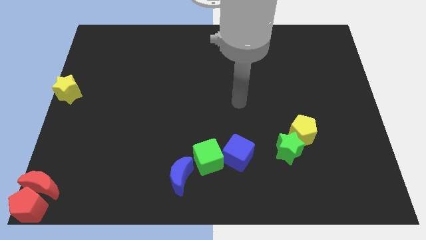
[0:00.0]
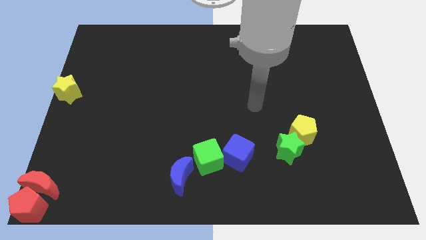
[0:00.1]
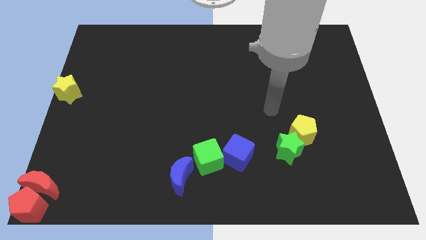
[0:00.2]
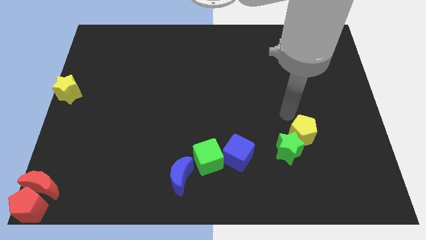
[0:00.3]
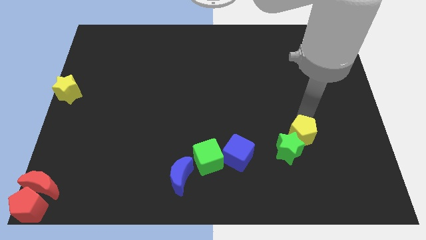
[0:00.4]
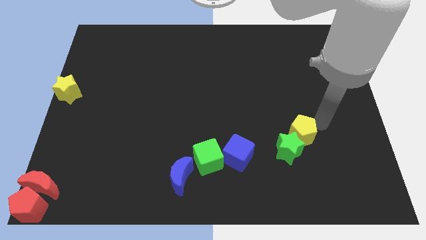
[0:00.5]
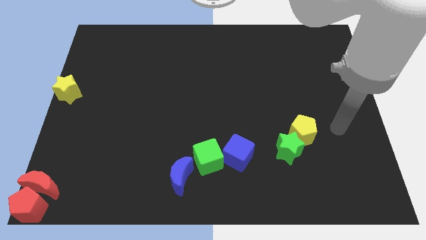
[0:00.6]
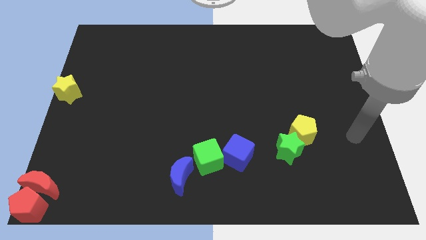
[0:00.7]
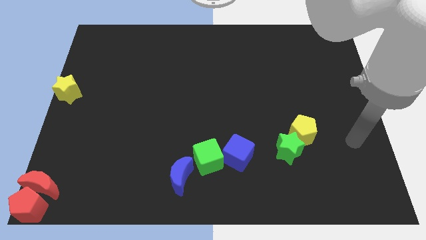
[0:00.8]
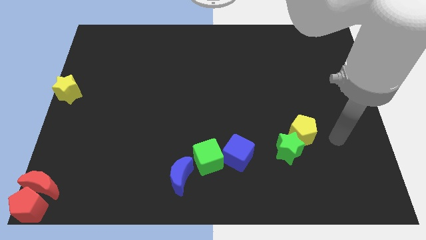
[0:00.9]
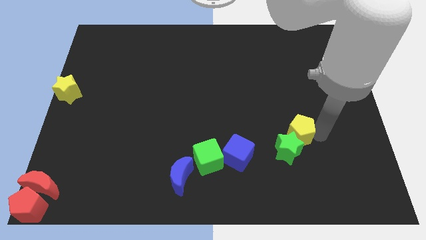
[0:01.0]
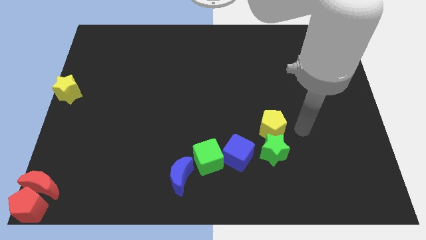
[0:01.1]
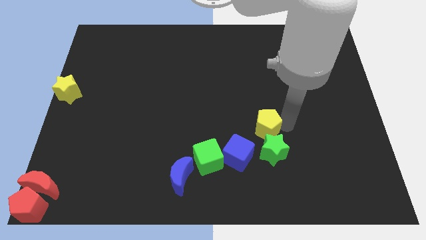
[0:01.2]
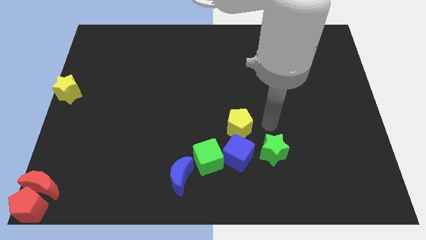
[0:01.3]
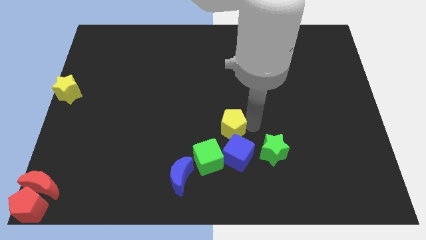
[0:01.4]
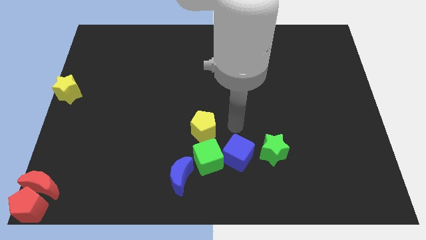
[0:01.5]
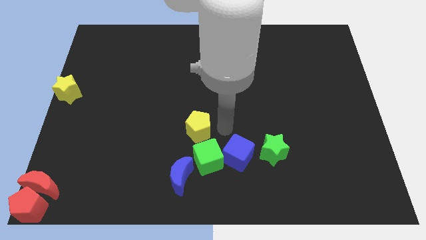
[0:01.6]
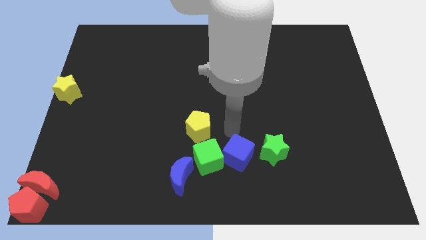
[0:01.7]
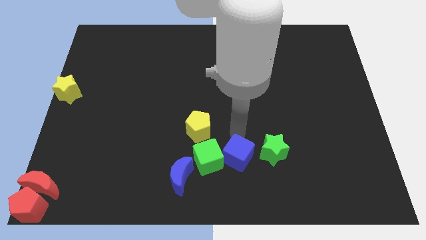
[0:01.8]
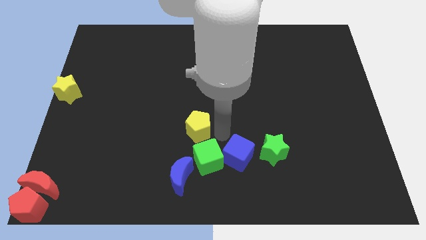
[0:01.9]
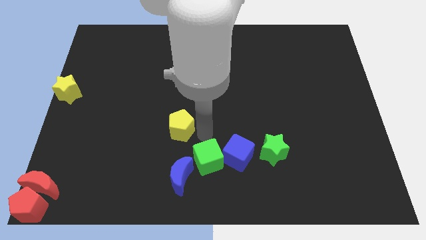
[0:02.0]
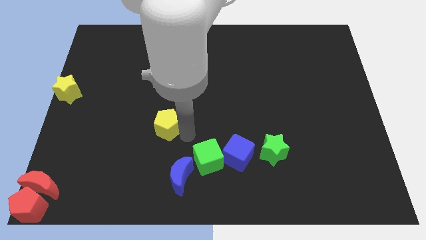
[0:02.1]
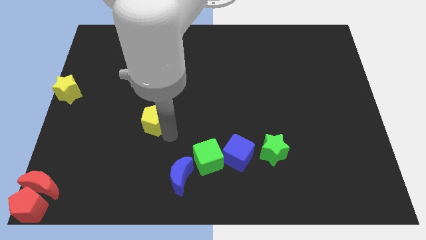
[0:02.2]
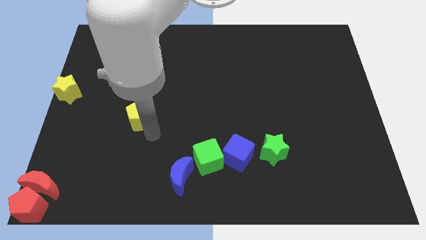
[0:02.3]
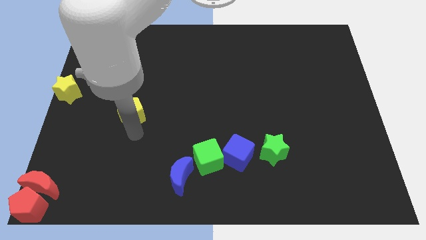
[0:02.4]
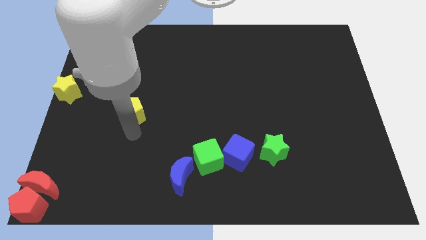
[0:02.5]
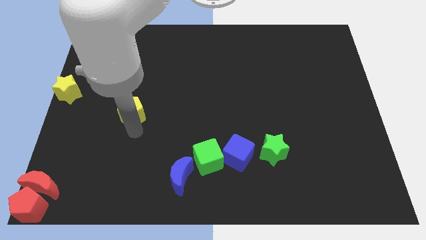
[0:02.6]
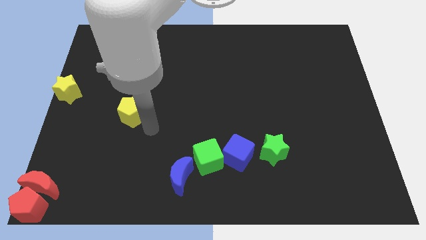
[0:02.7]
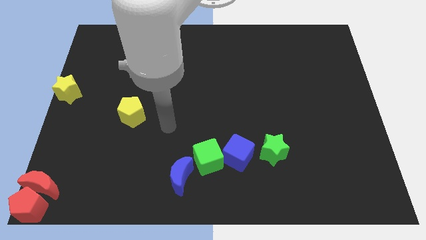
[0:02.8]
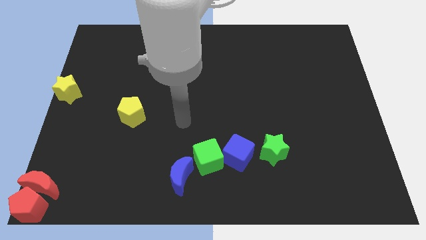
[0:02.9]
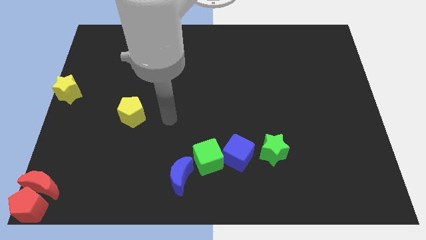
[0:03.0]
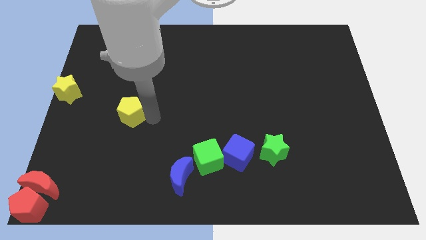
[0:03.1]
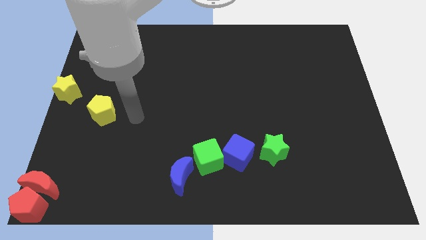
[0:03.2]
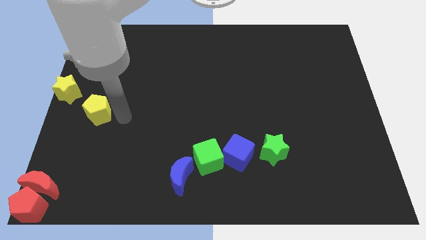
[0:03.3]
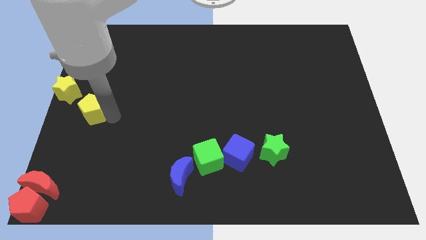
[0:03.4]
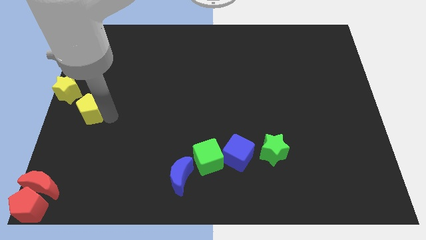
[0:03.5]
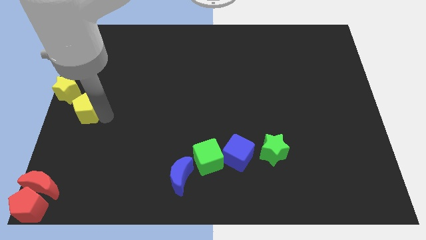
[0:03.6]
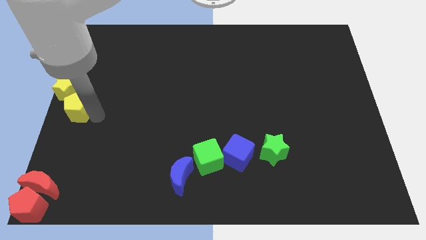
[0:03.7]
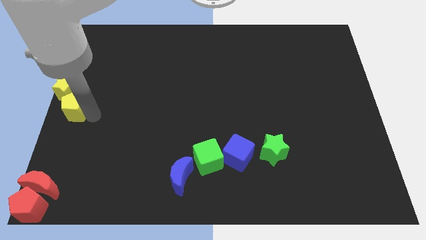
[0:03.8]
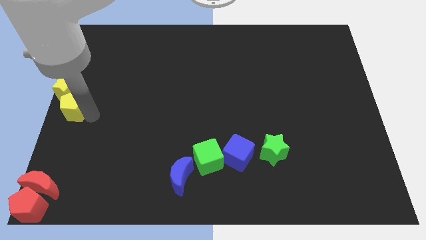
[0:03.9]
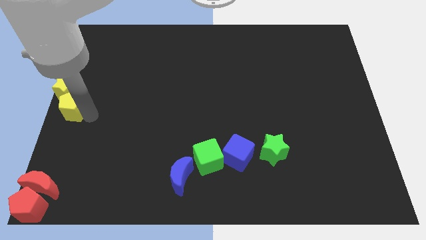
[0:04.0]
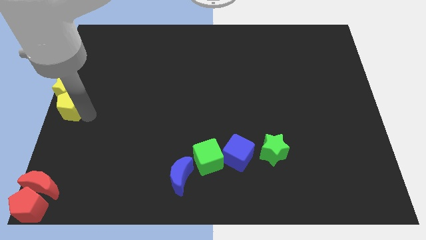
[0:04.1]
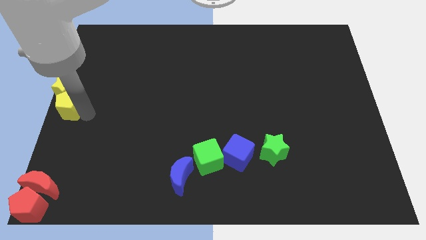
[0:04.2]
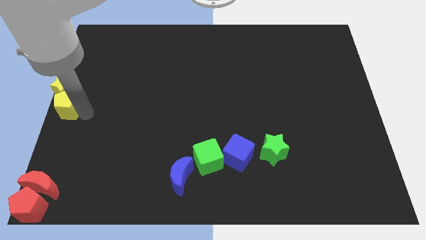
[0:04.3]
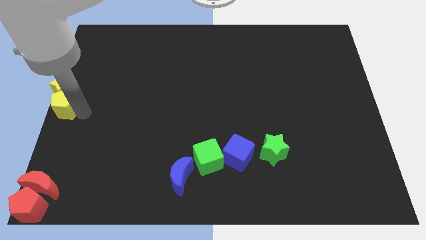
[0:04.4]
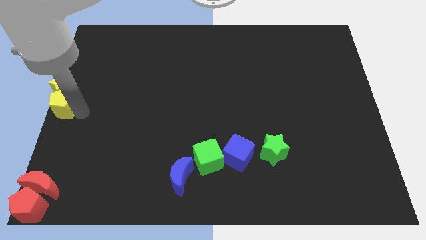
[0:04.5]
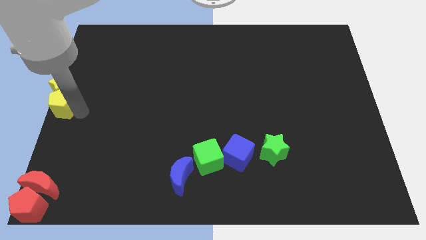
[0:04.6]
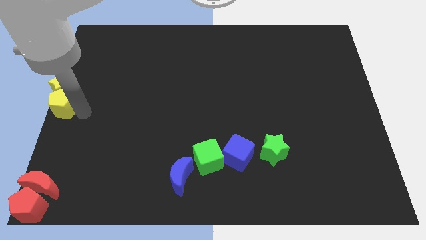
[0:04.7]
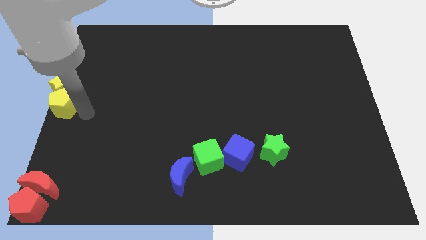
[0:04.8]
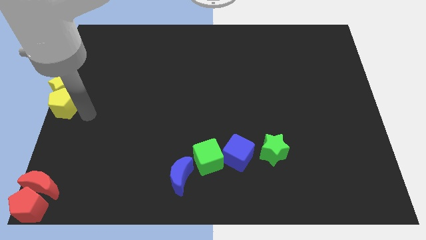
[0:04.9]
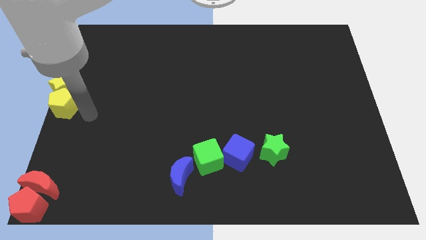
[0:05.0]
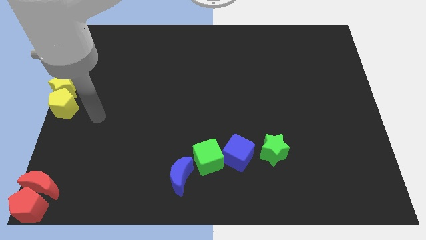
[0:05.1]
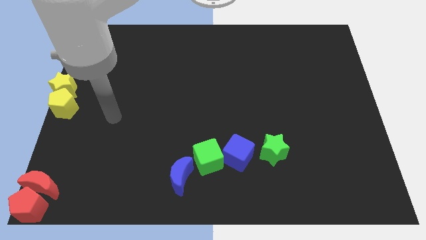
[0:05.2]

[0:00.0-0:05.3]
move the yellow pentagon to the bottom side of the yellow star

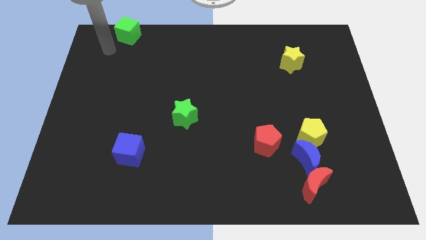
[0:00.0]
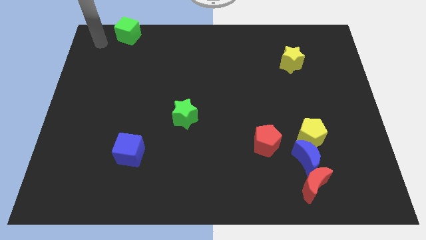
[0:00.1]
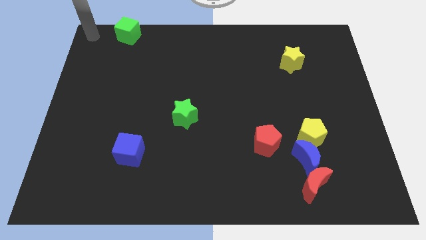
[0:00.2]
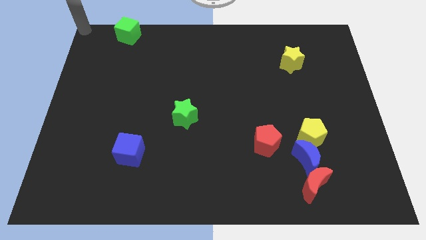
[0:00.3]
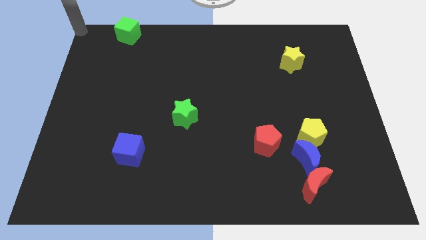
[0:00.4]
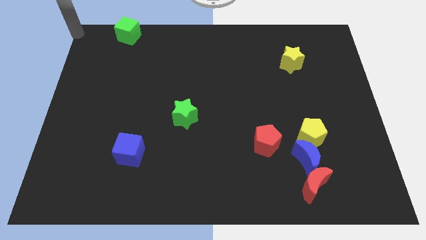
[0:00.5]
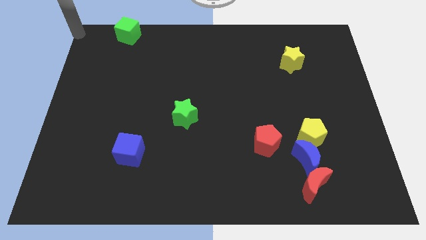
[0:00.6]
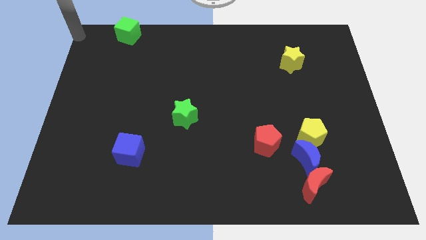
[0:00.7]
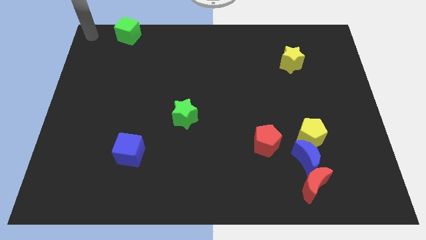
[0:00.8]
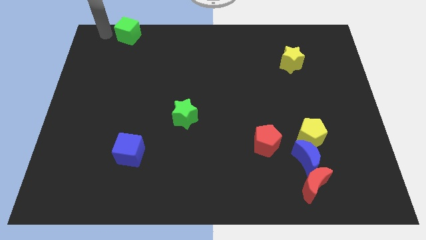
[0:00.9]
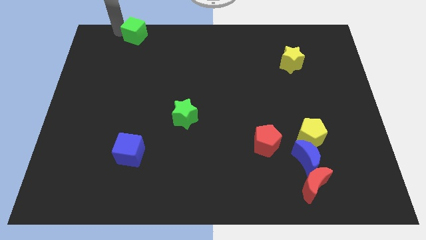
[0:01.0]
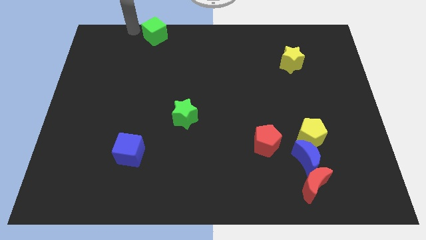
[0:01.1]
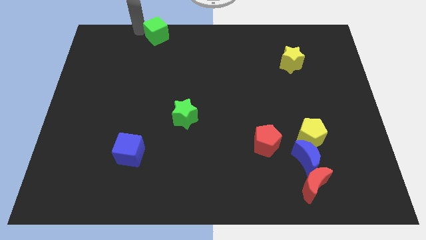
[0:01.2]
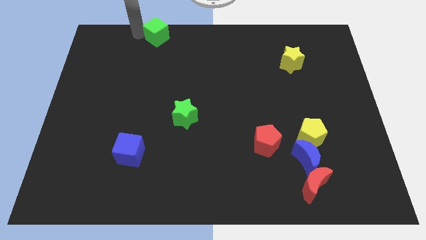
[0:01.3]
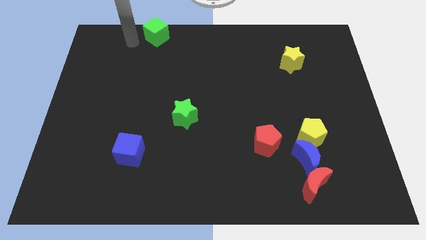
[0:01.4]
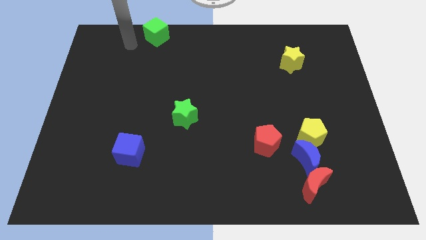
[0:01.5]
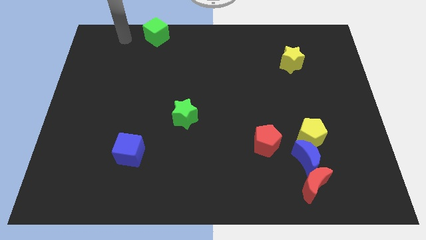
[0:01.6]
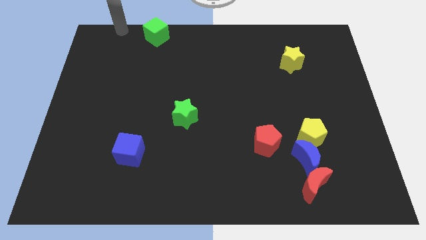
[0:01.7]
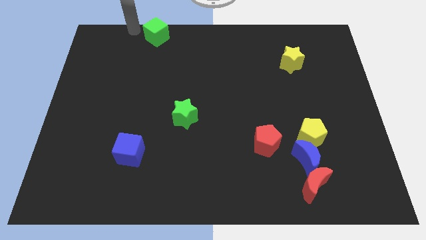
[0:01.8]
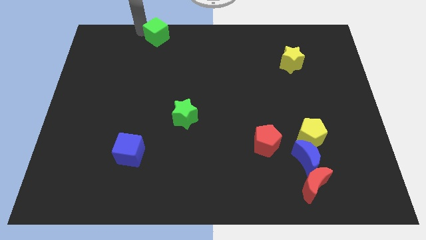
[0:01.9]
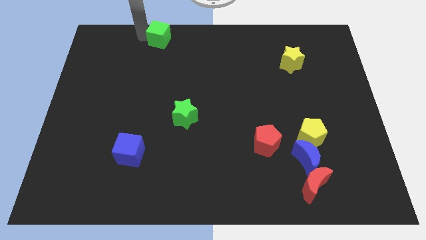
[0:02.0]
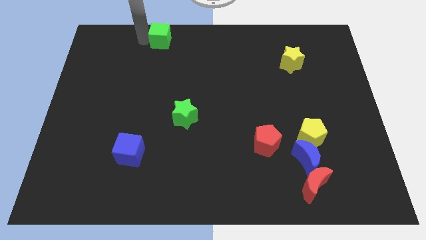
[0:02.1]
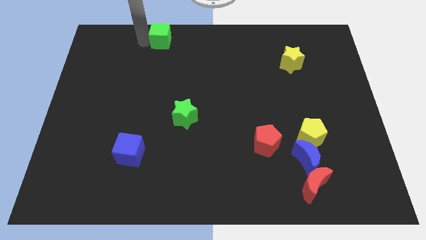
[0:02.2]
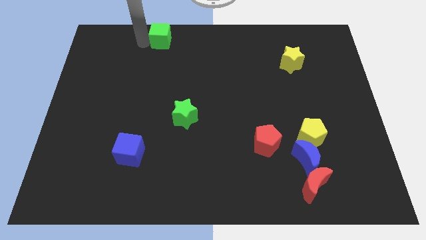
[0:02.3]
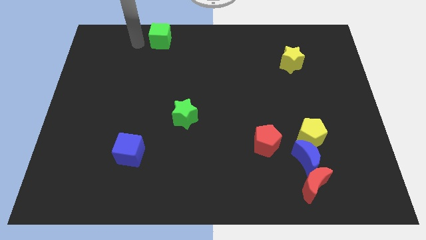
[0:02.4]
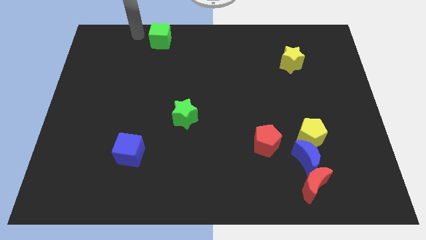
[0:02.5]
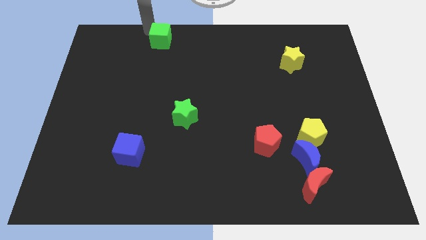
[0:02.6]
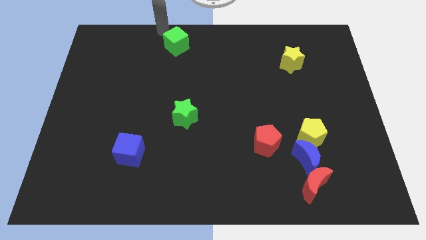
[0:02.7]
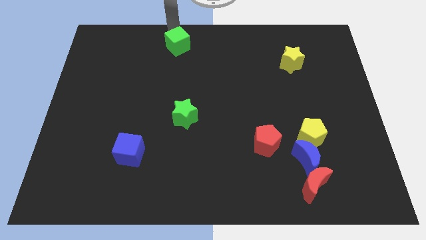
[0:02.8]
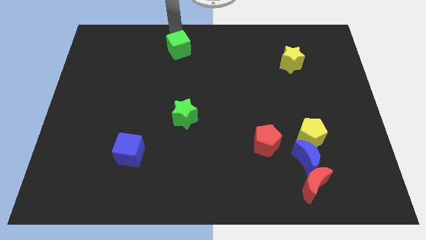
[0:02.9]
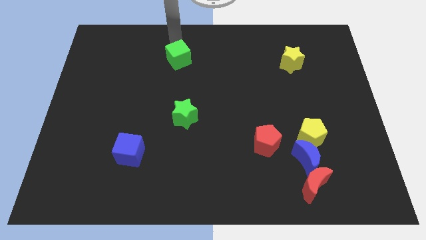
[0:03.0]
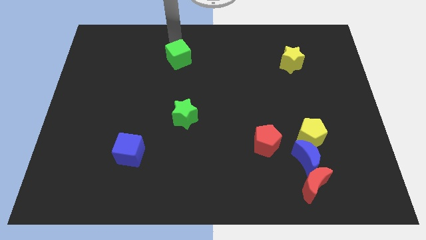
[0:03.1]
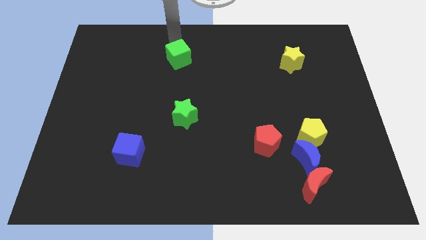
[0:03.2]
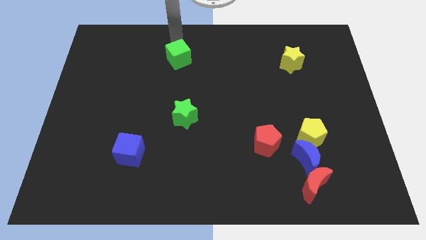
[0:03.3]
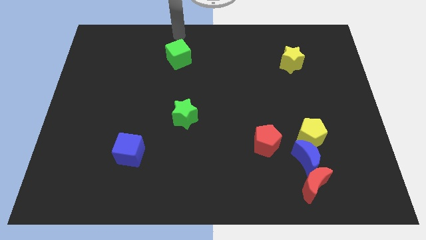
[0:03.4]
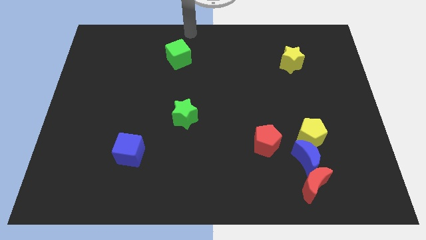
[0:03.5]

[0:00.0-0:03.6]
put the green cube horizontally to the left of the yellow star
